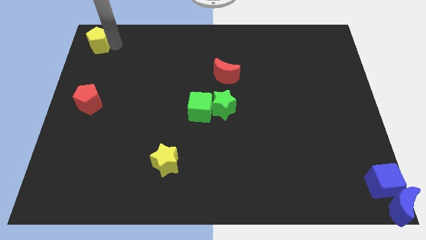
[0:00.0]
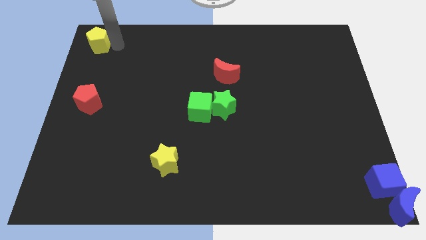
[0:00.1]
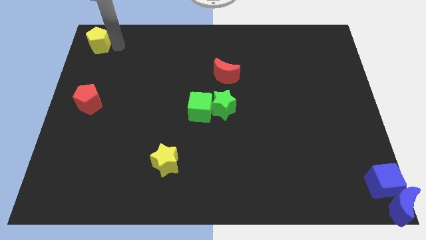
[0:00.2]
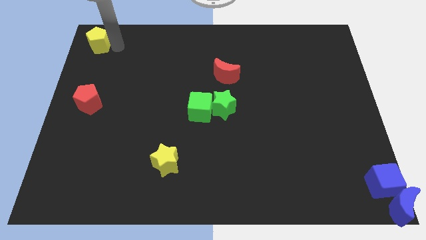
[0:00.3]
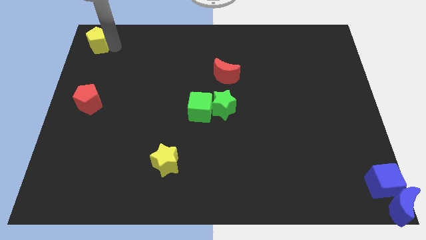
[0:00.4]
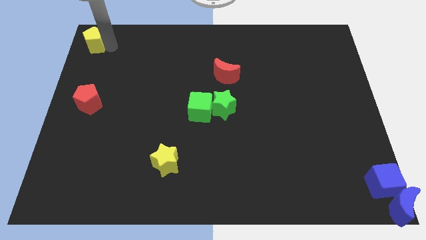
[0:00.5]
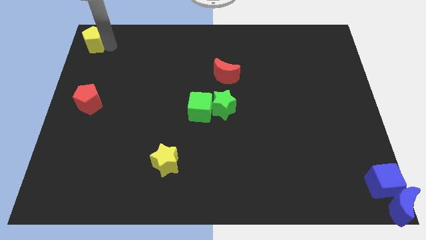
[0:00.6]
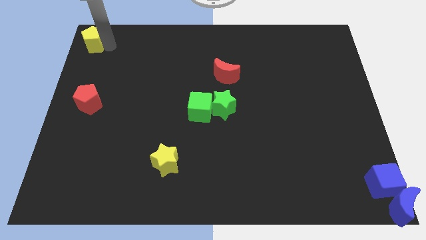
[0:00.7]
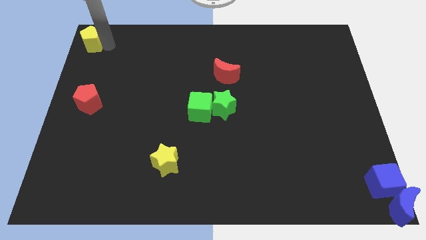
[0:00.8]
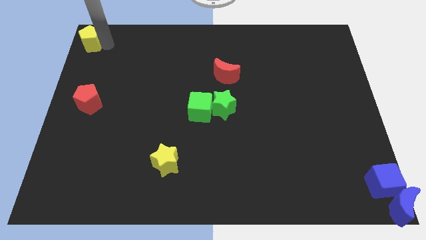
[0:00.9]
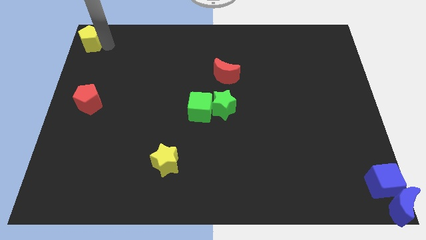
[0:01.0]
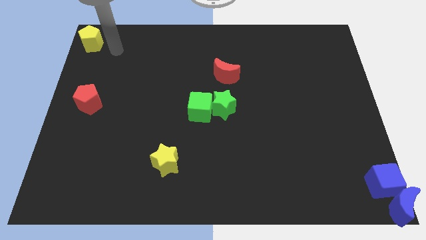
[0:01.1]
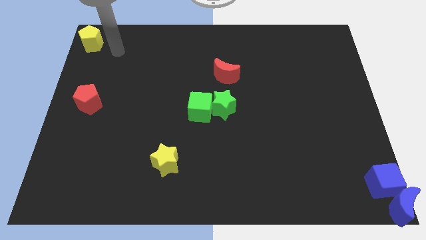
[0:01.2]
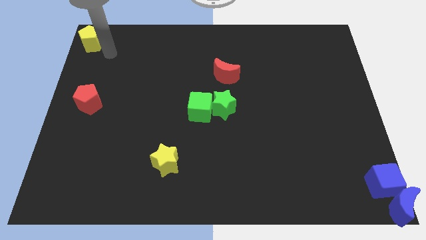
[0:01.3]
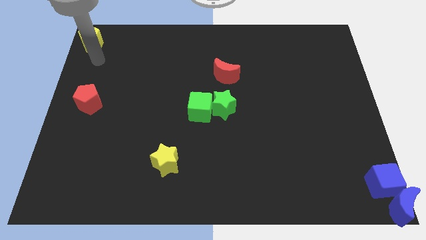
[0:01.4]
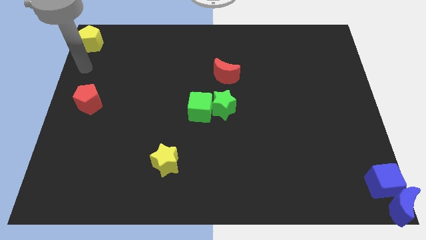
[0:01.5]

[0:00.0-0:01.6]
move the yellow pentagon to the top left corner of the board

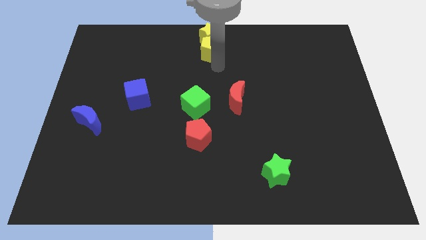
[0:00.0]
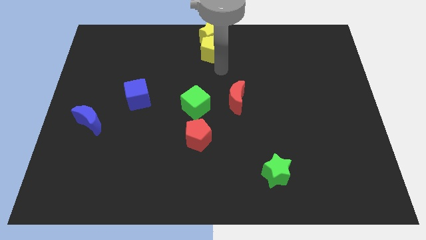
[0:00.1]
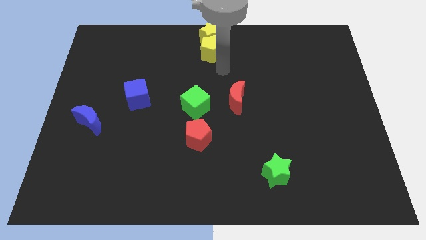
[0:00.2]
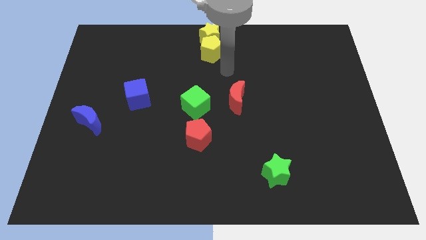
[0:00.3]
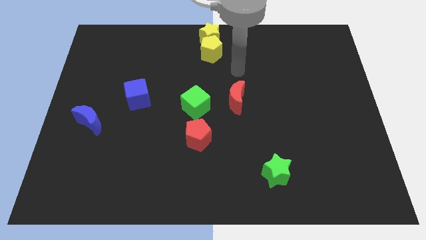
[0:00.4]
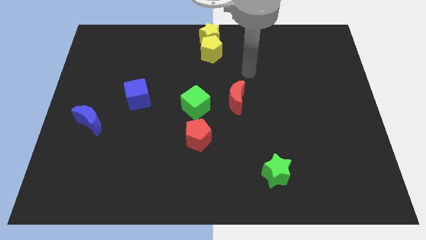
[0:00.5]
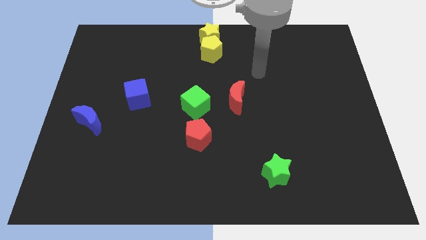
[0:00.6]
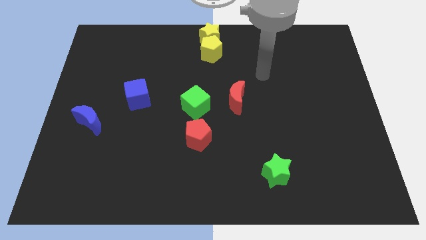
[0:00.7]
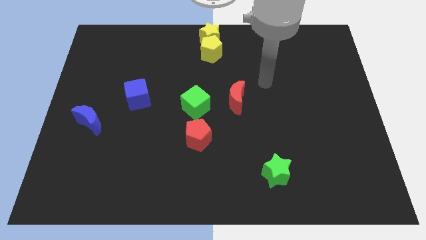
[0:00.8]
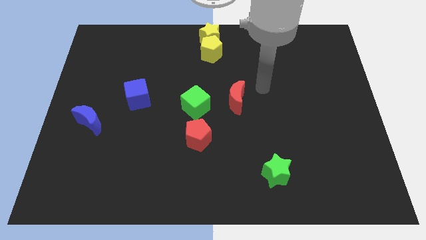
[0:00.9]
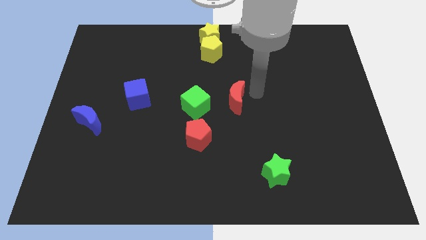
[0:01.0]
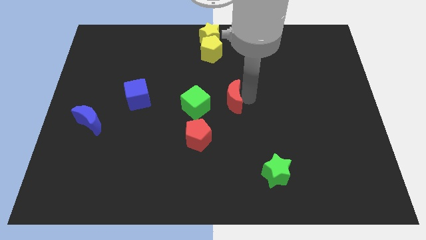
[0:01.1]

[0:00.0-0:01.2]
move your arm to the right of the red pentagon

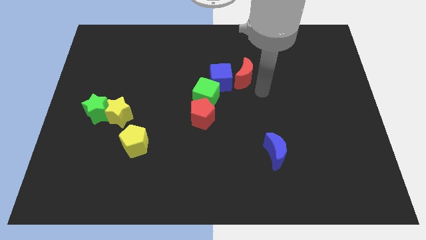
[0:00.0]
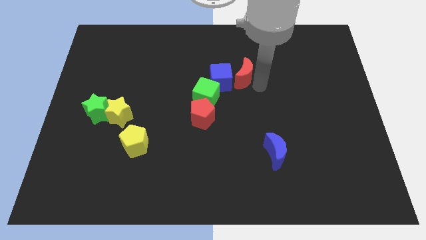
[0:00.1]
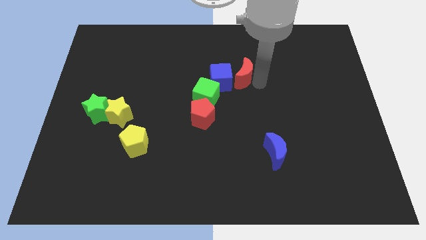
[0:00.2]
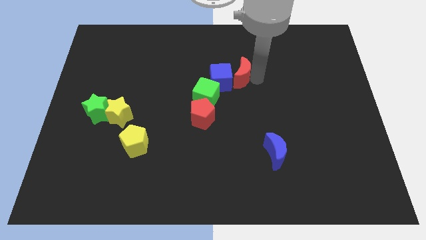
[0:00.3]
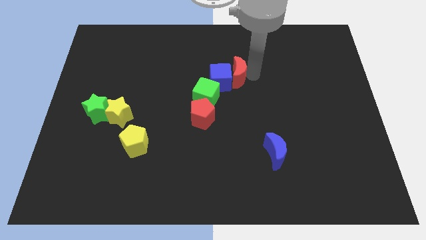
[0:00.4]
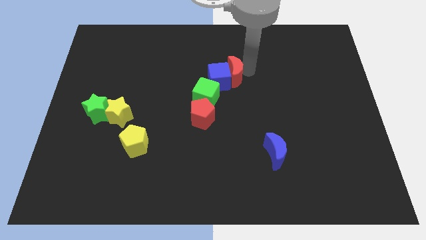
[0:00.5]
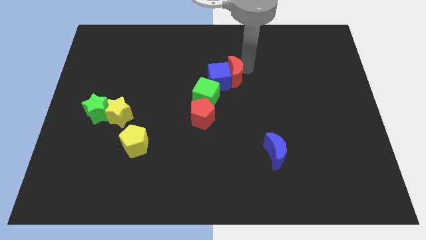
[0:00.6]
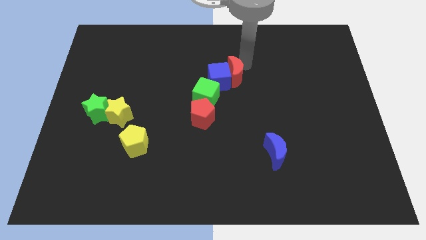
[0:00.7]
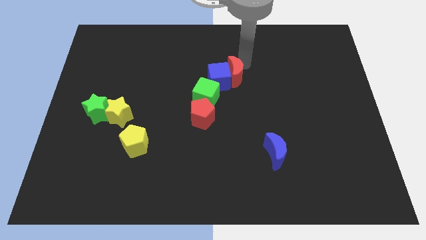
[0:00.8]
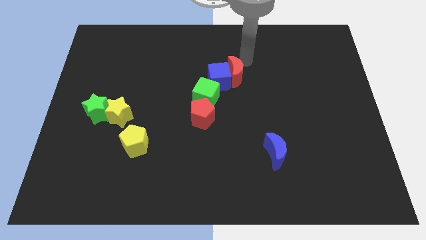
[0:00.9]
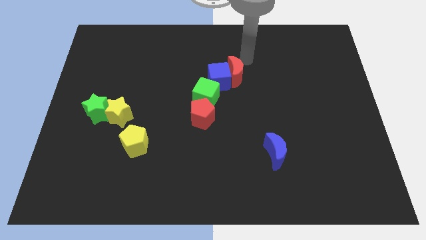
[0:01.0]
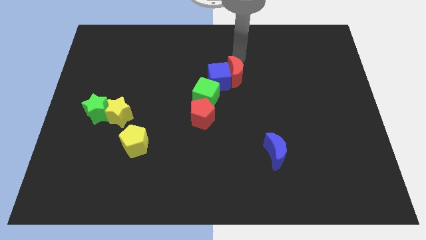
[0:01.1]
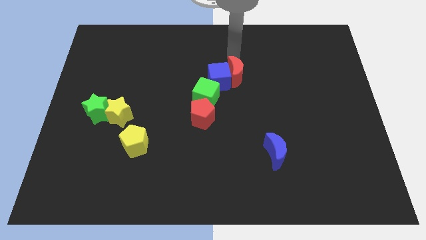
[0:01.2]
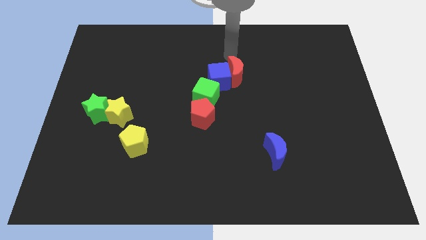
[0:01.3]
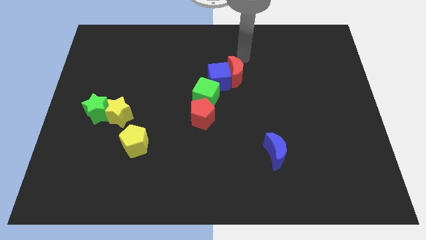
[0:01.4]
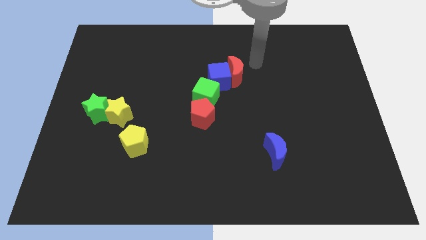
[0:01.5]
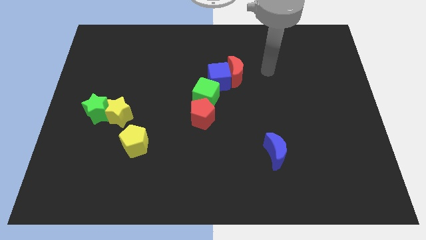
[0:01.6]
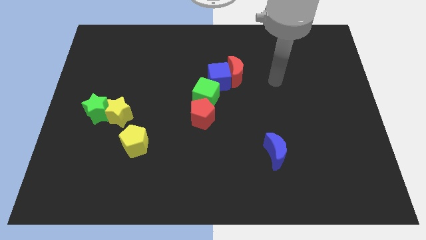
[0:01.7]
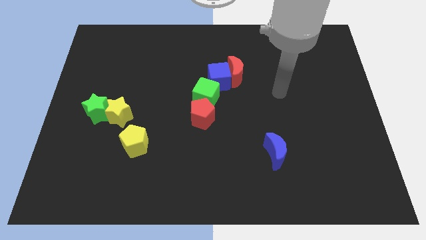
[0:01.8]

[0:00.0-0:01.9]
push the red crescent into the blue cube

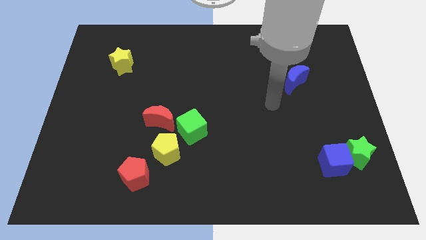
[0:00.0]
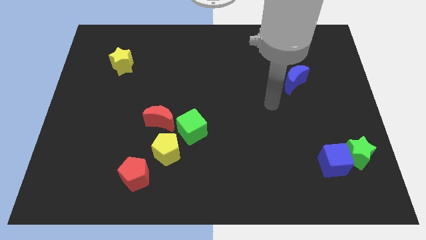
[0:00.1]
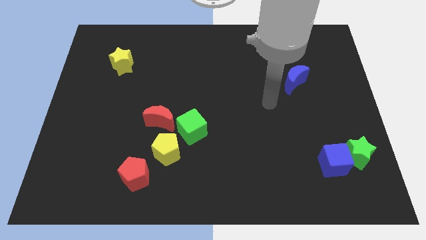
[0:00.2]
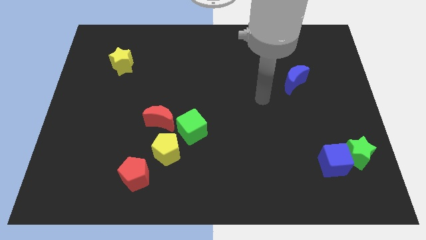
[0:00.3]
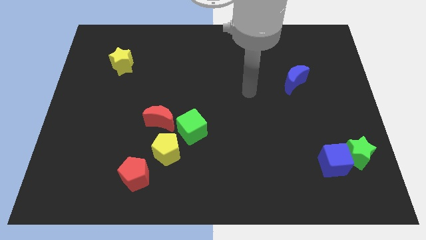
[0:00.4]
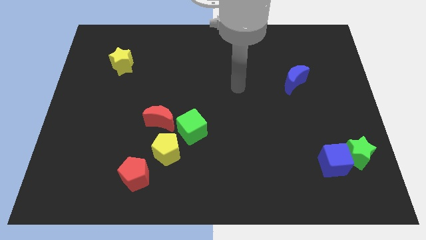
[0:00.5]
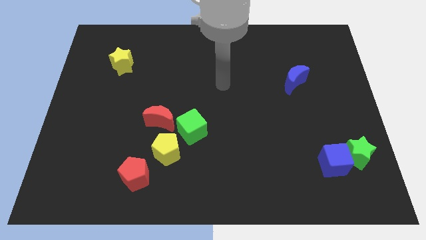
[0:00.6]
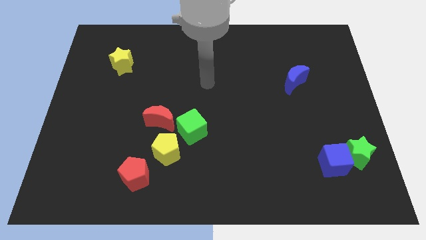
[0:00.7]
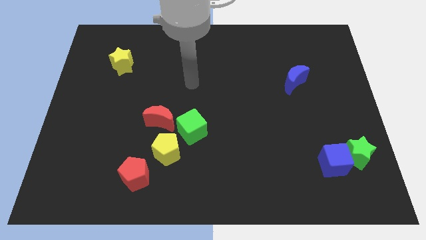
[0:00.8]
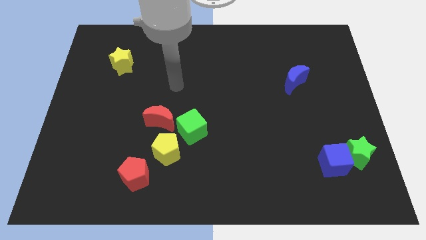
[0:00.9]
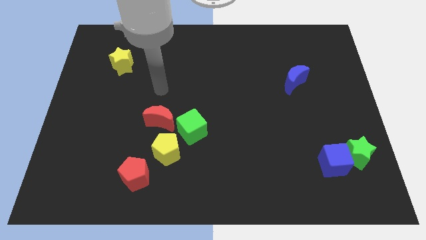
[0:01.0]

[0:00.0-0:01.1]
slide your arm above red moon

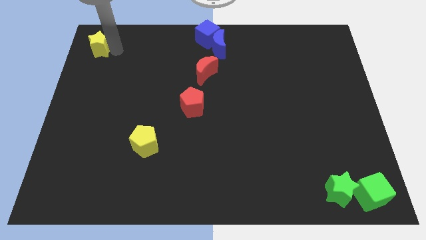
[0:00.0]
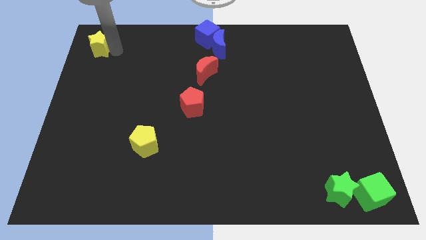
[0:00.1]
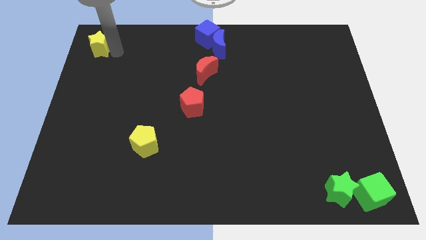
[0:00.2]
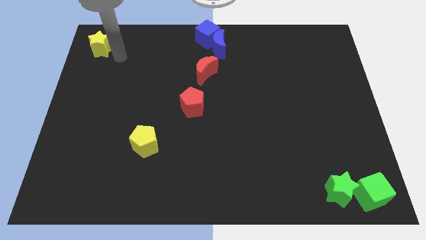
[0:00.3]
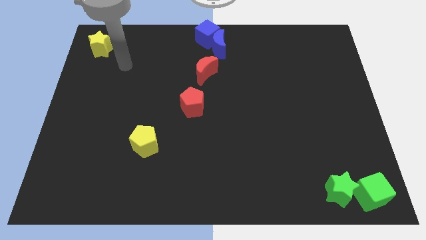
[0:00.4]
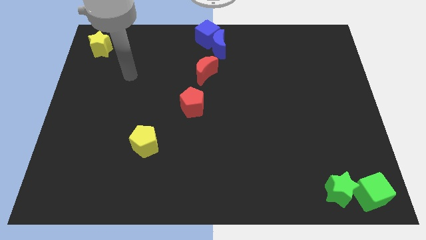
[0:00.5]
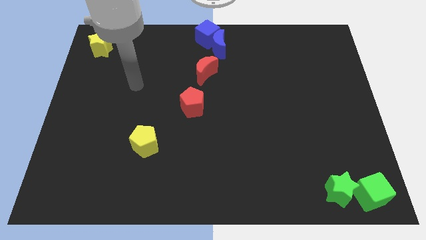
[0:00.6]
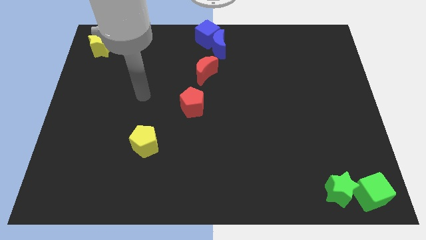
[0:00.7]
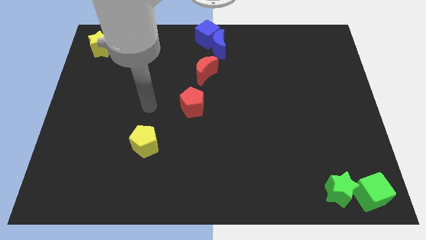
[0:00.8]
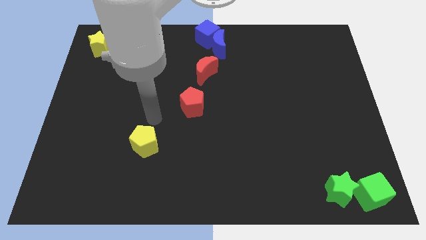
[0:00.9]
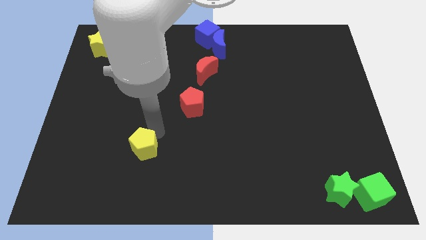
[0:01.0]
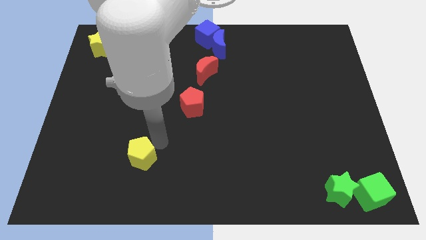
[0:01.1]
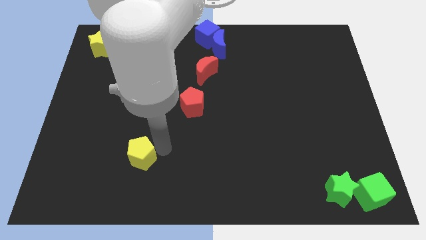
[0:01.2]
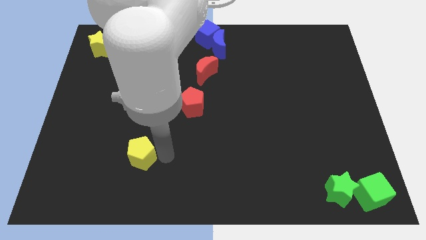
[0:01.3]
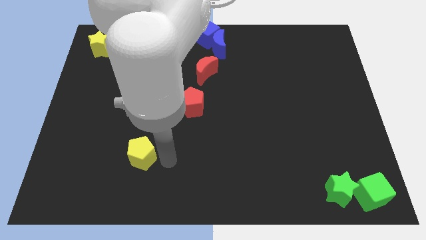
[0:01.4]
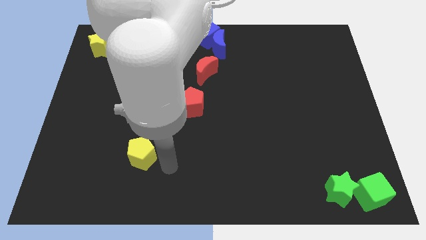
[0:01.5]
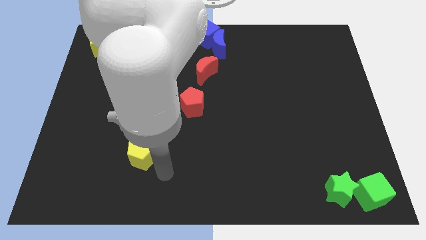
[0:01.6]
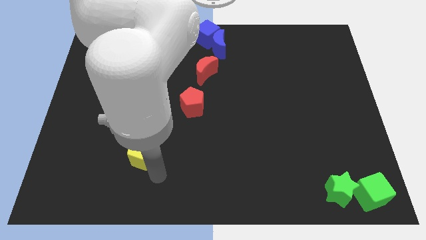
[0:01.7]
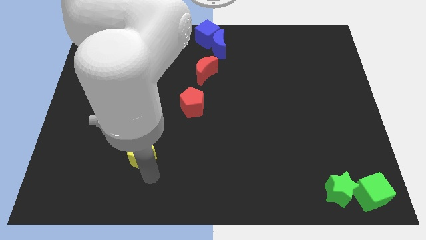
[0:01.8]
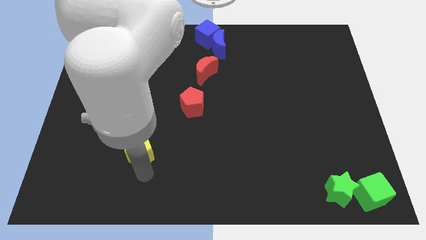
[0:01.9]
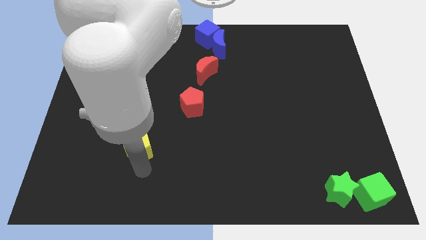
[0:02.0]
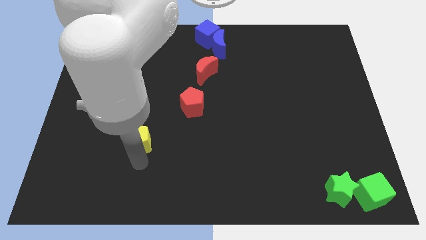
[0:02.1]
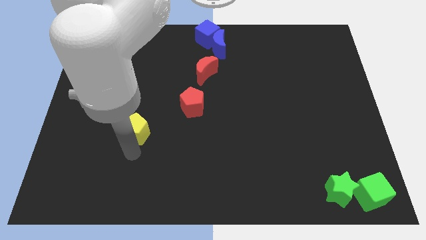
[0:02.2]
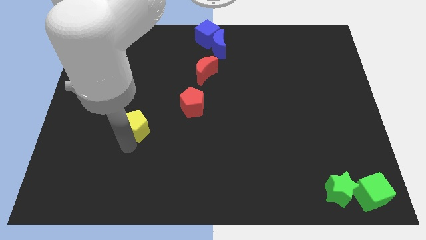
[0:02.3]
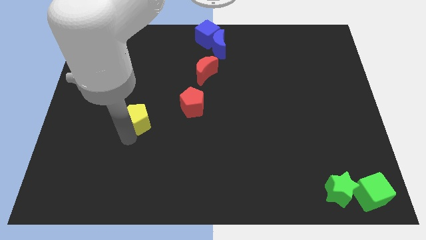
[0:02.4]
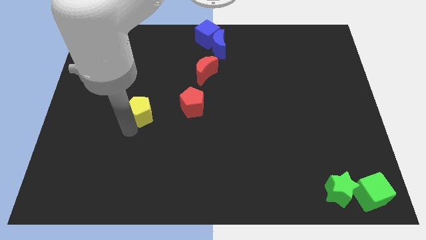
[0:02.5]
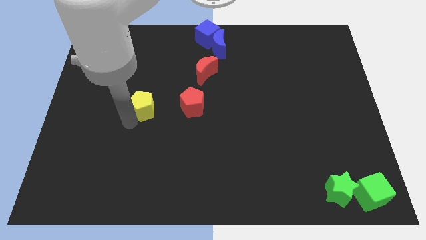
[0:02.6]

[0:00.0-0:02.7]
place the yellow pentagon left to the red pentagon

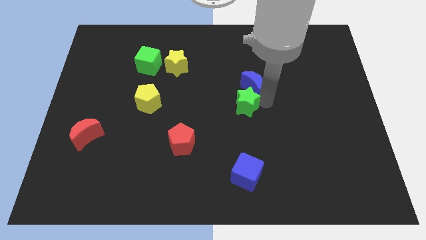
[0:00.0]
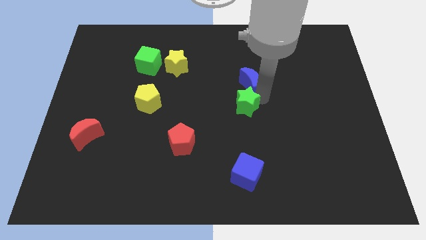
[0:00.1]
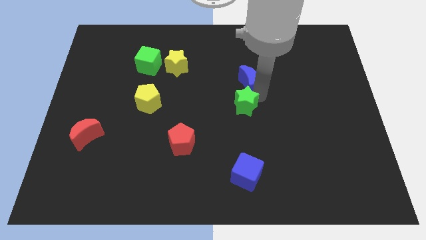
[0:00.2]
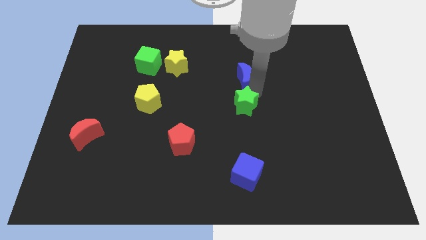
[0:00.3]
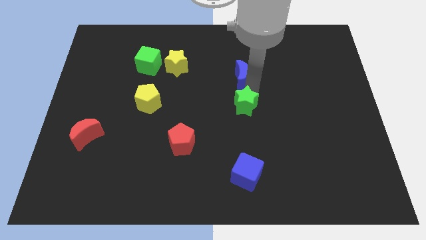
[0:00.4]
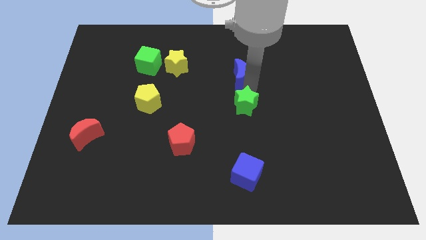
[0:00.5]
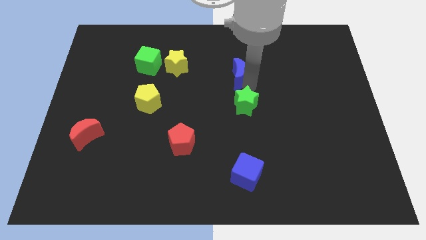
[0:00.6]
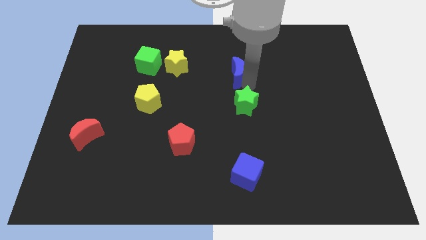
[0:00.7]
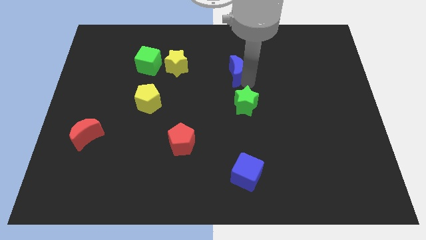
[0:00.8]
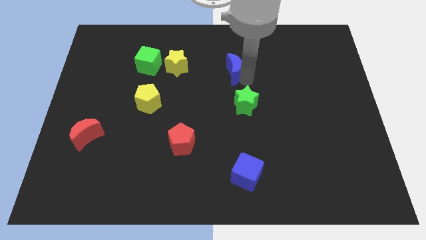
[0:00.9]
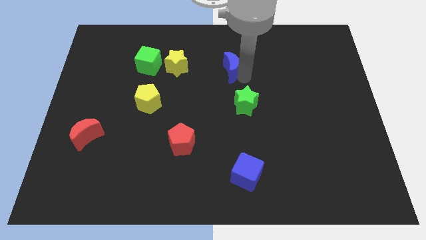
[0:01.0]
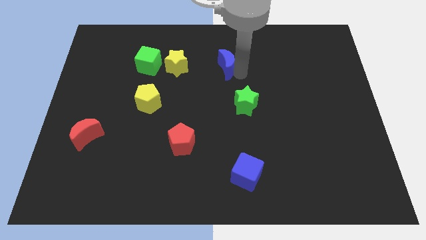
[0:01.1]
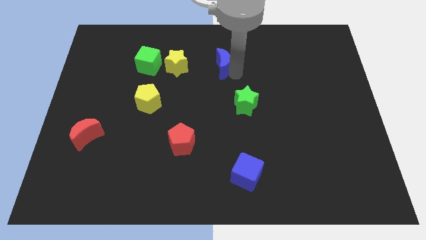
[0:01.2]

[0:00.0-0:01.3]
separate blue moon from green star